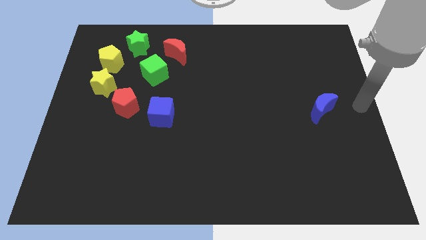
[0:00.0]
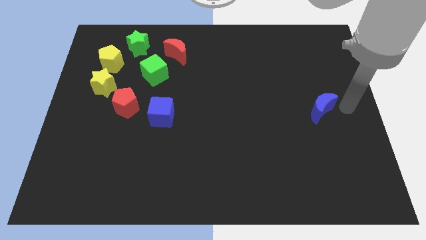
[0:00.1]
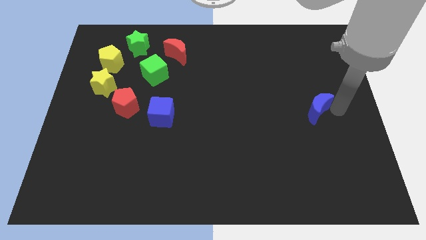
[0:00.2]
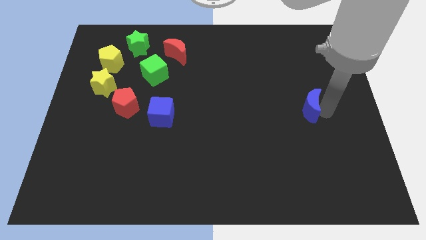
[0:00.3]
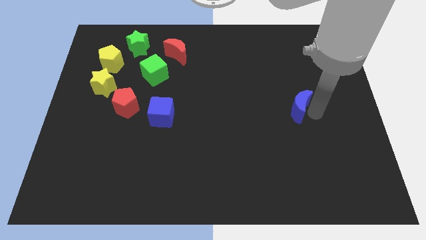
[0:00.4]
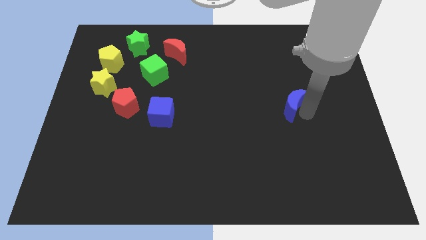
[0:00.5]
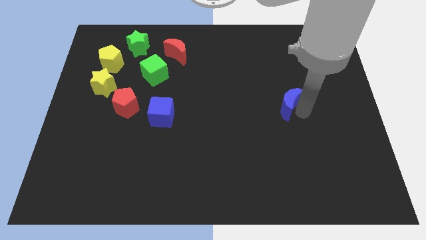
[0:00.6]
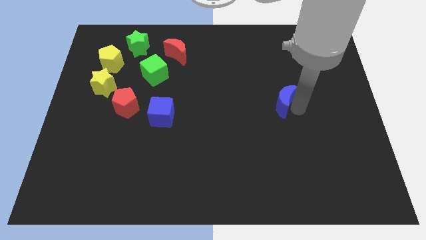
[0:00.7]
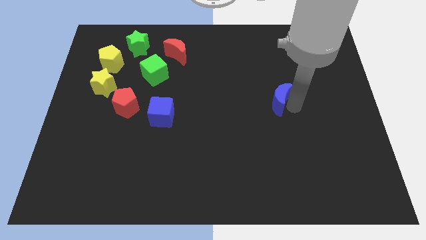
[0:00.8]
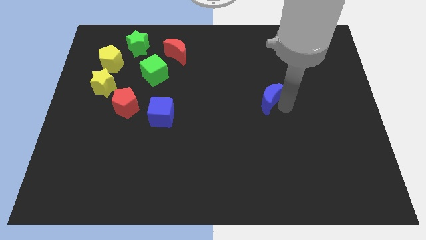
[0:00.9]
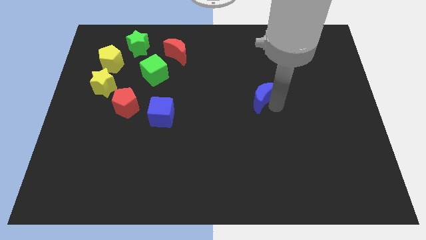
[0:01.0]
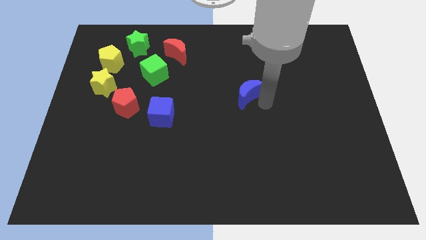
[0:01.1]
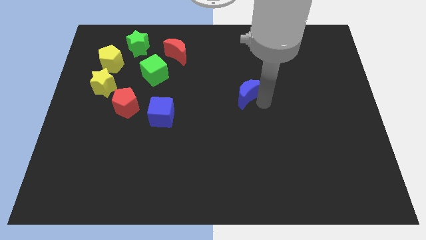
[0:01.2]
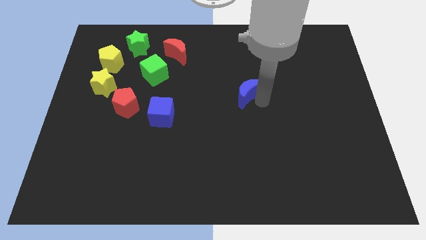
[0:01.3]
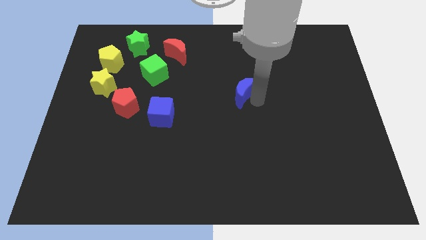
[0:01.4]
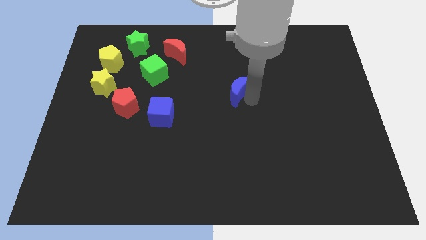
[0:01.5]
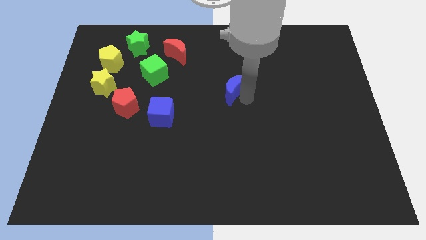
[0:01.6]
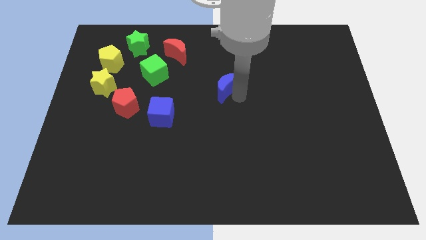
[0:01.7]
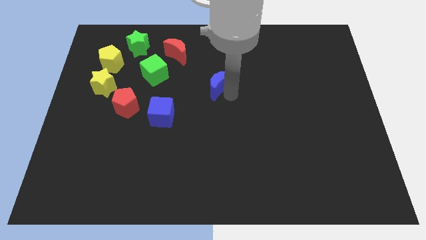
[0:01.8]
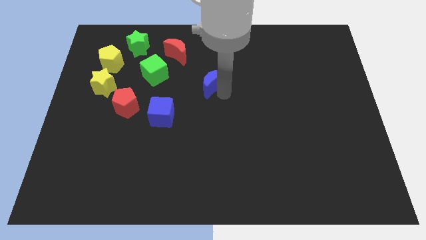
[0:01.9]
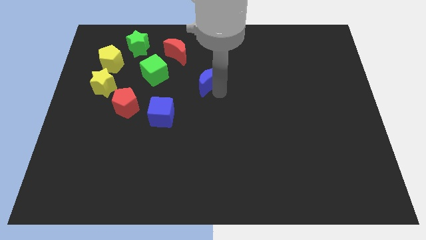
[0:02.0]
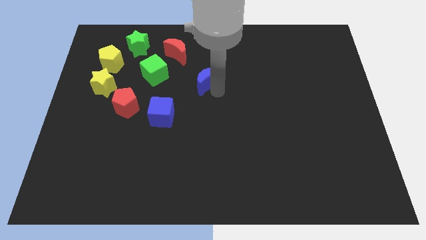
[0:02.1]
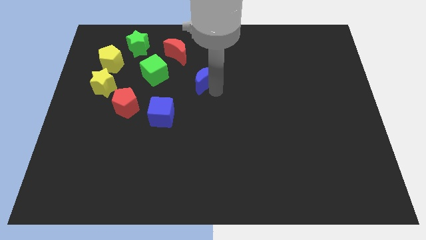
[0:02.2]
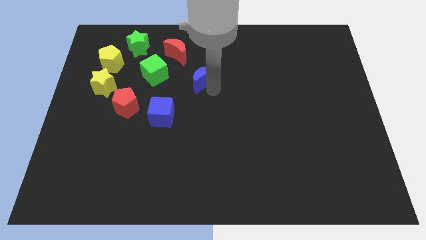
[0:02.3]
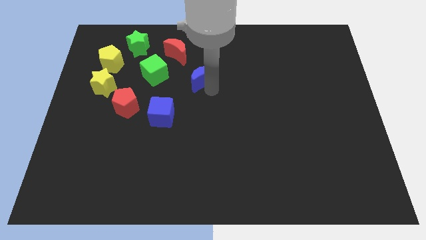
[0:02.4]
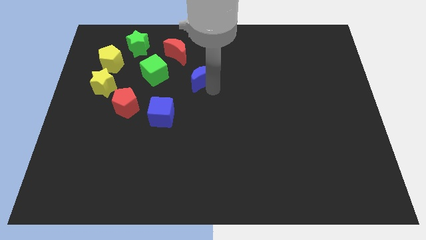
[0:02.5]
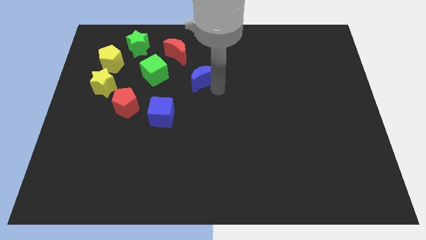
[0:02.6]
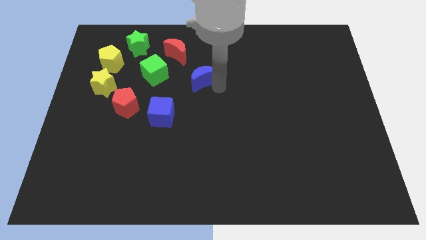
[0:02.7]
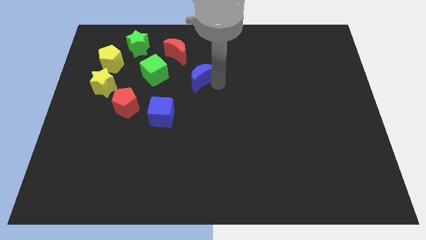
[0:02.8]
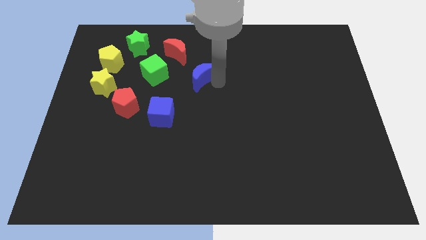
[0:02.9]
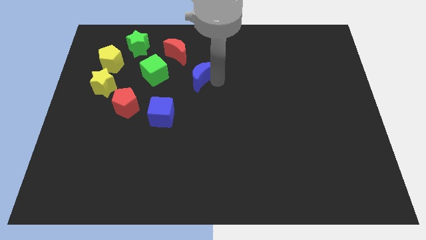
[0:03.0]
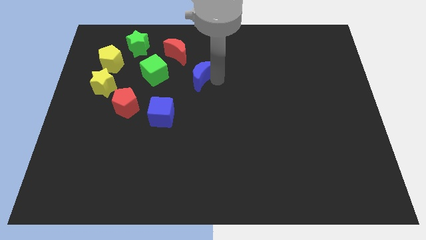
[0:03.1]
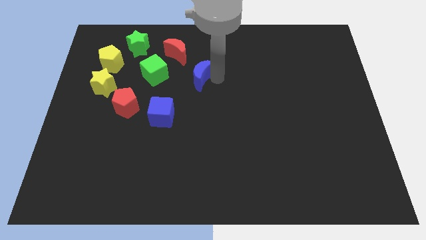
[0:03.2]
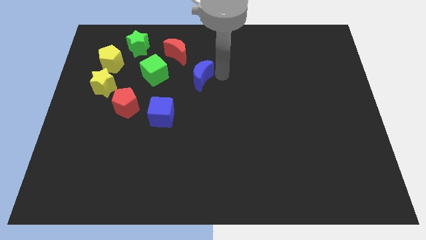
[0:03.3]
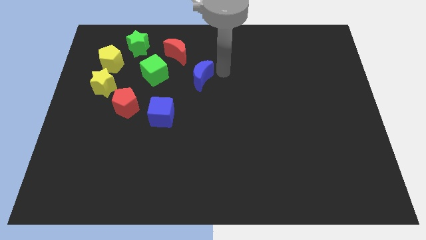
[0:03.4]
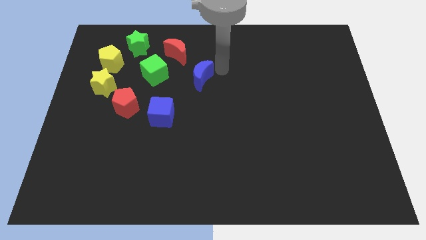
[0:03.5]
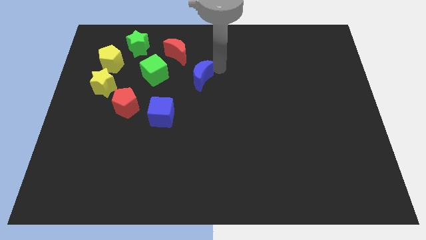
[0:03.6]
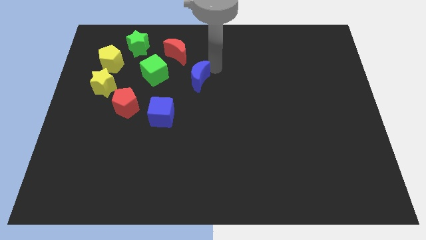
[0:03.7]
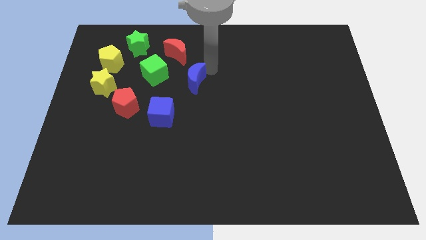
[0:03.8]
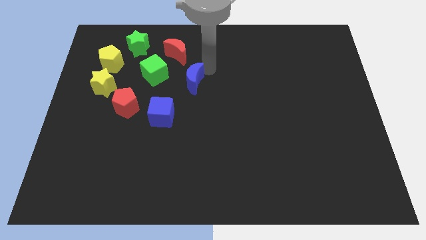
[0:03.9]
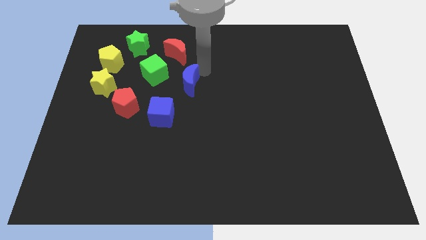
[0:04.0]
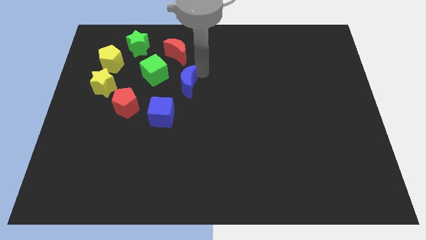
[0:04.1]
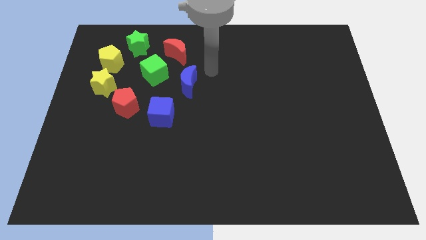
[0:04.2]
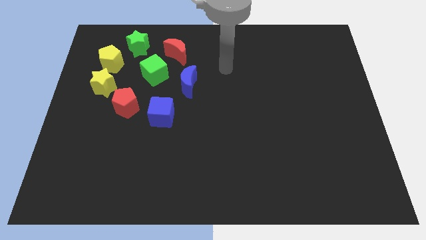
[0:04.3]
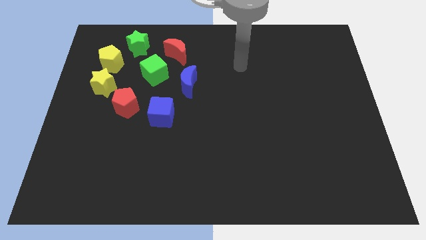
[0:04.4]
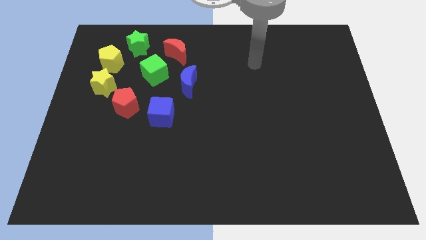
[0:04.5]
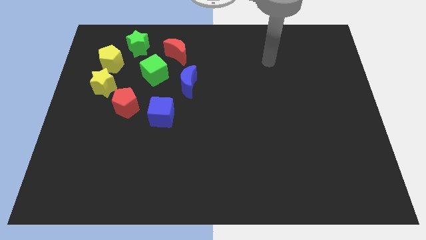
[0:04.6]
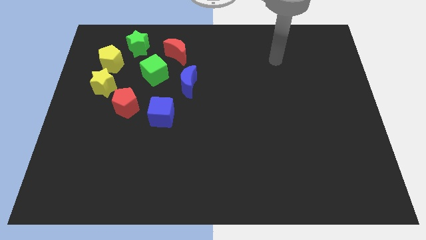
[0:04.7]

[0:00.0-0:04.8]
move the blue crescent below the red crescent

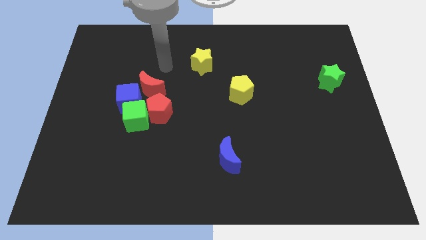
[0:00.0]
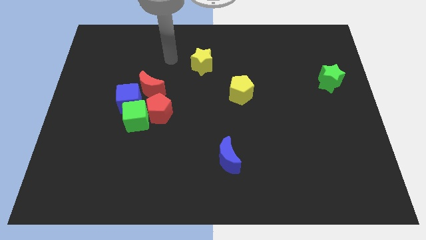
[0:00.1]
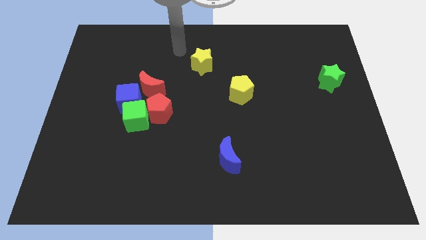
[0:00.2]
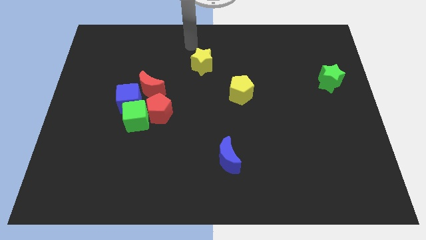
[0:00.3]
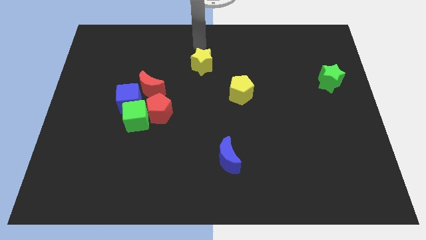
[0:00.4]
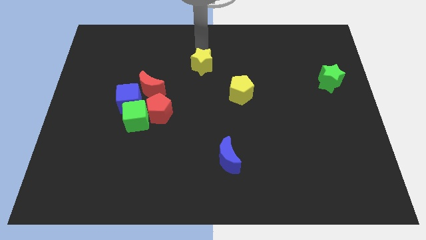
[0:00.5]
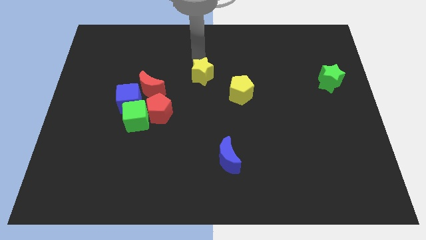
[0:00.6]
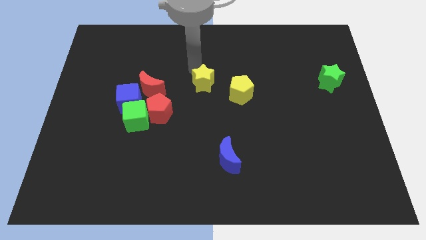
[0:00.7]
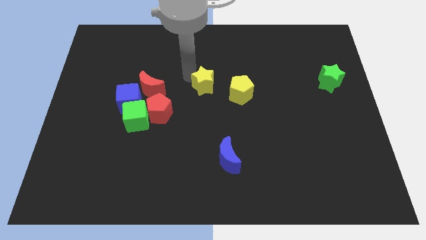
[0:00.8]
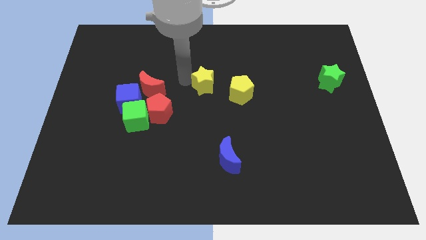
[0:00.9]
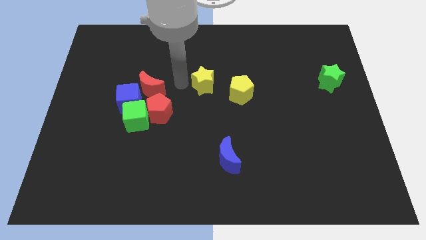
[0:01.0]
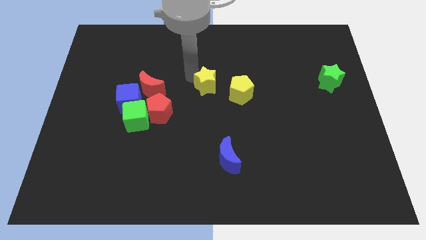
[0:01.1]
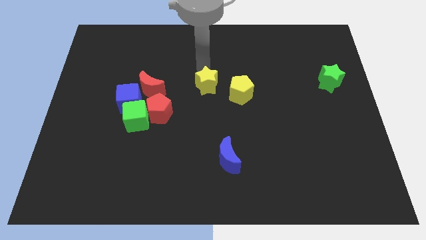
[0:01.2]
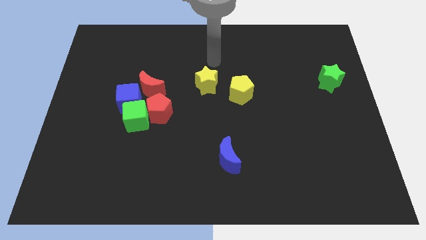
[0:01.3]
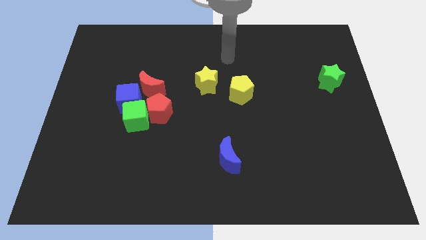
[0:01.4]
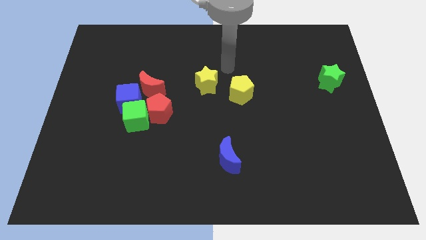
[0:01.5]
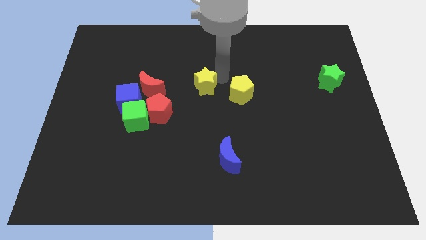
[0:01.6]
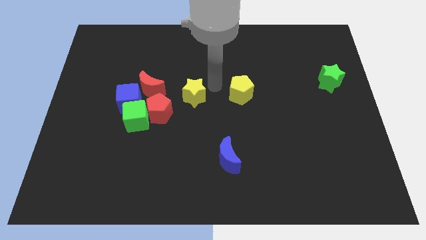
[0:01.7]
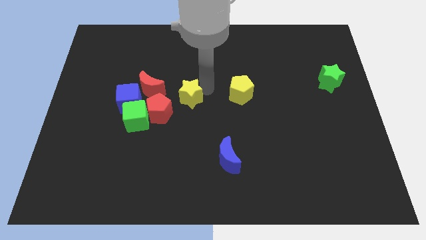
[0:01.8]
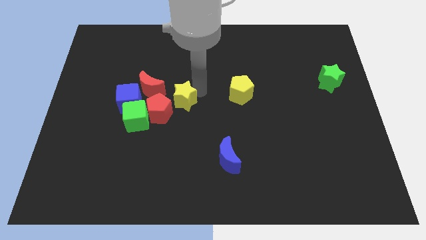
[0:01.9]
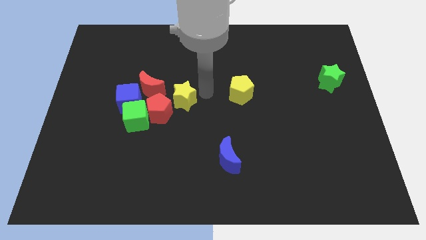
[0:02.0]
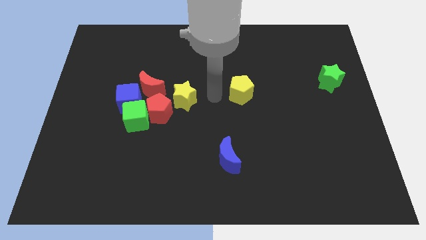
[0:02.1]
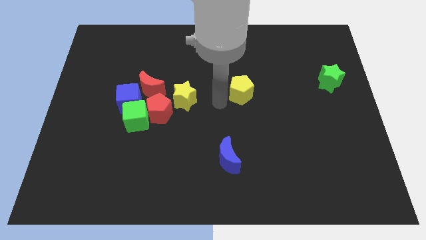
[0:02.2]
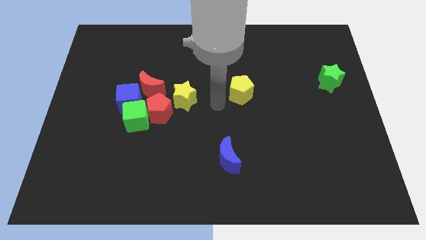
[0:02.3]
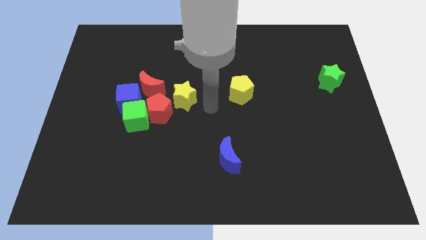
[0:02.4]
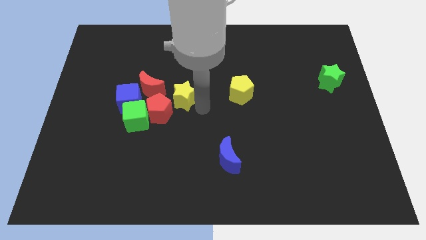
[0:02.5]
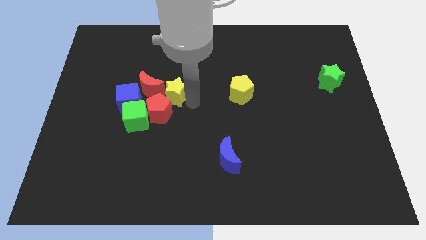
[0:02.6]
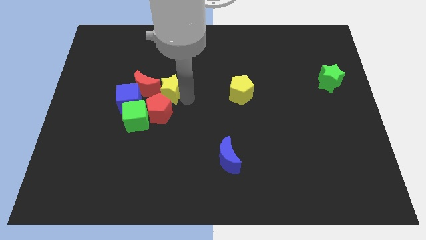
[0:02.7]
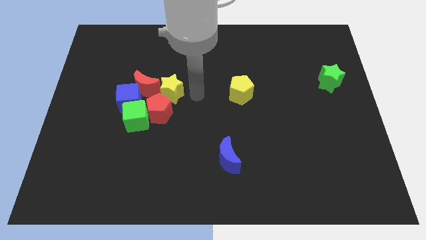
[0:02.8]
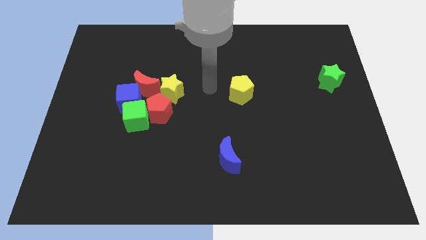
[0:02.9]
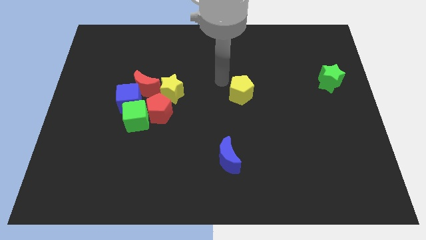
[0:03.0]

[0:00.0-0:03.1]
move the yellow star into the red crescent

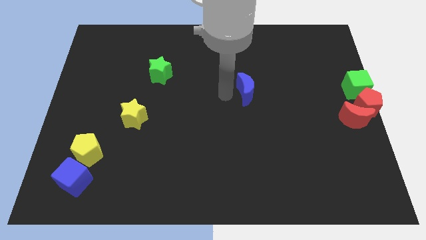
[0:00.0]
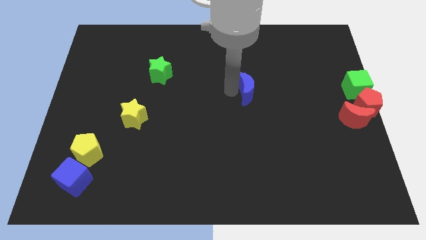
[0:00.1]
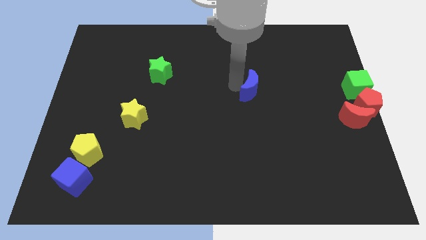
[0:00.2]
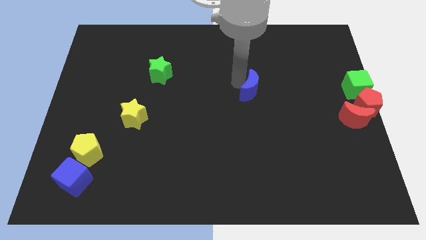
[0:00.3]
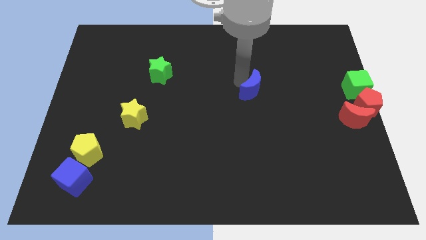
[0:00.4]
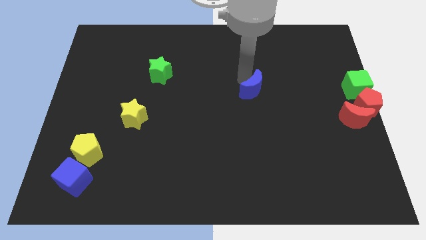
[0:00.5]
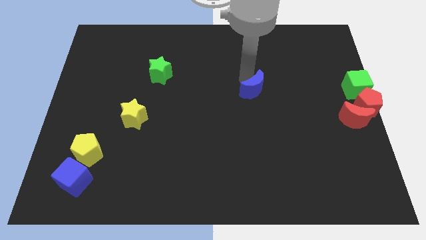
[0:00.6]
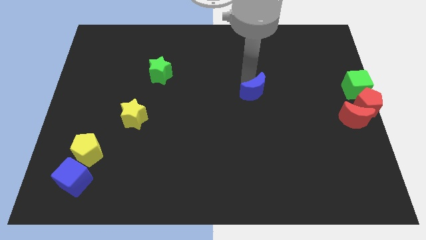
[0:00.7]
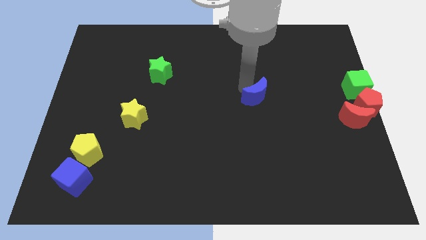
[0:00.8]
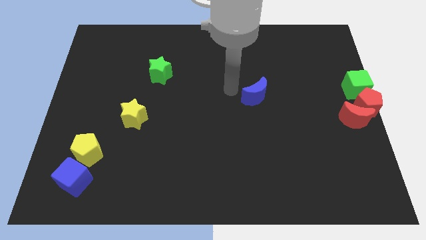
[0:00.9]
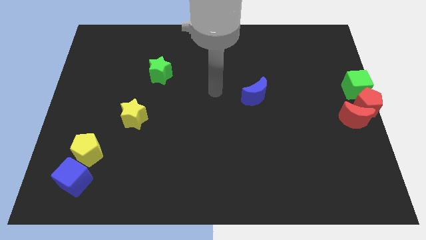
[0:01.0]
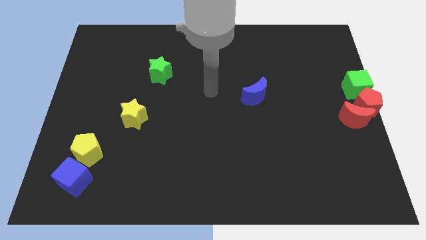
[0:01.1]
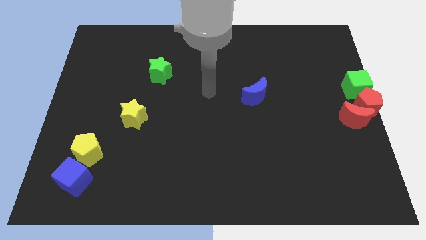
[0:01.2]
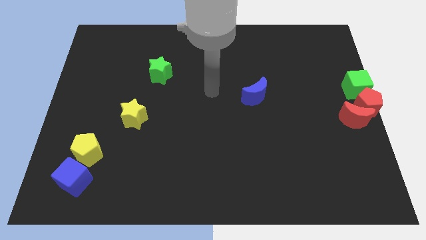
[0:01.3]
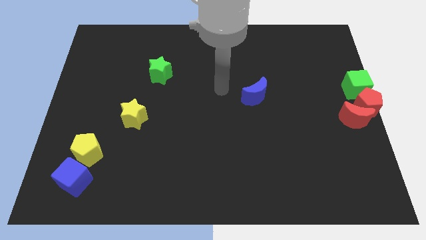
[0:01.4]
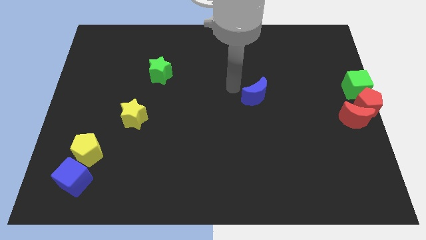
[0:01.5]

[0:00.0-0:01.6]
move the blue moon slightly downwards
